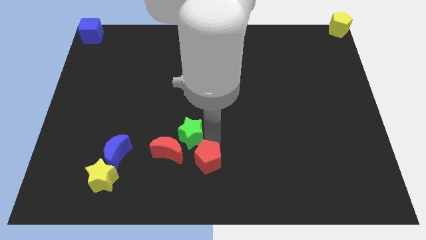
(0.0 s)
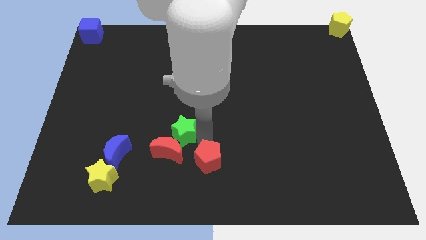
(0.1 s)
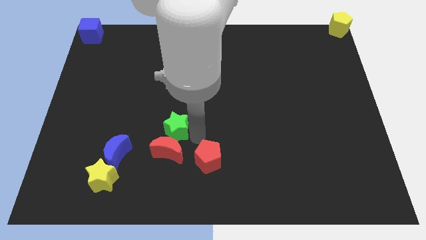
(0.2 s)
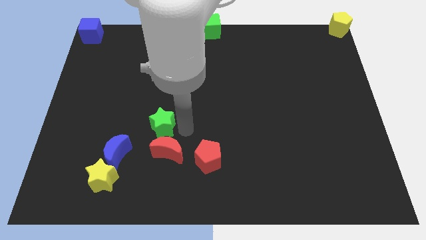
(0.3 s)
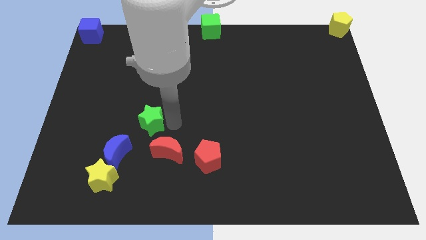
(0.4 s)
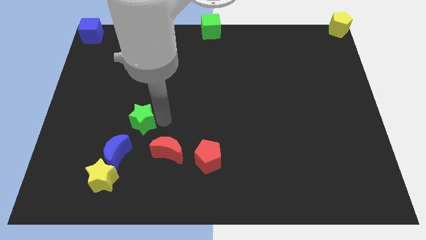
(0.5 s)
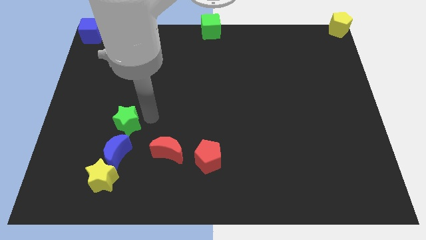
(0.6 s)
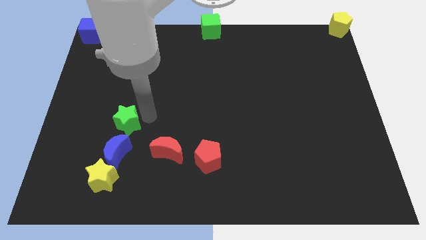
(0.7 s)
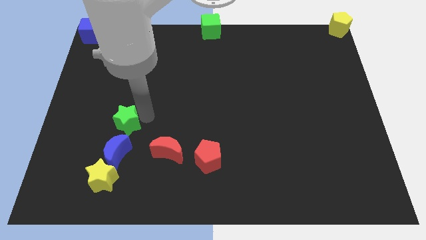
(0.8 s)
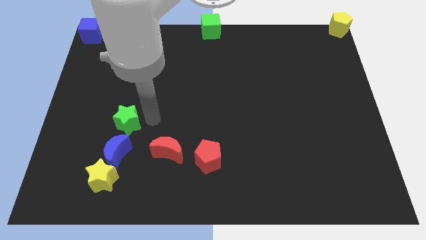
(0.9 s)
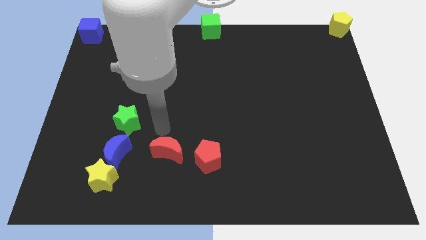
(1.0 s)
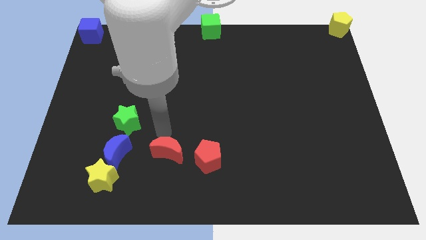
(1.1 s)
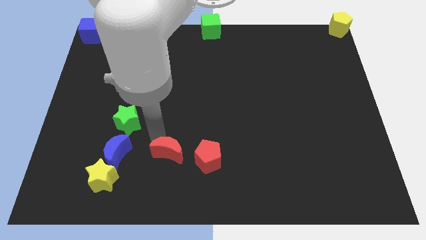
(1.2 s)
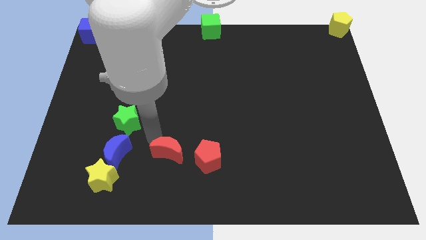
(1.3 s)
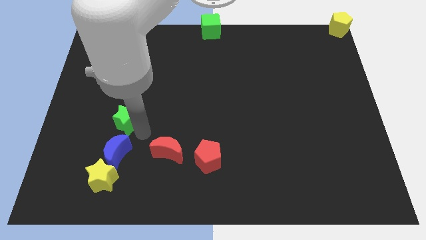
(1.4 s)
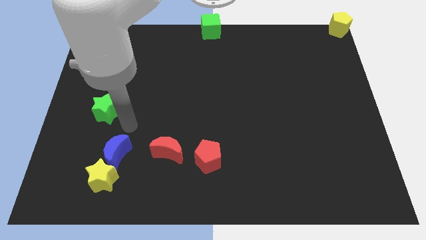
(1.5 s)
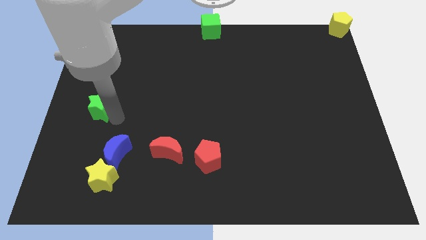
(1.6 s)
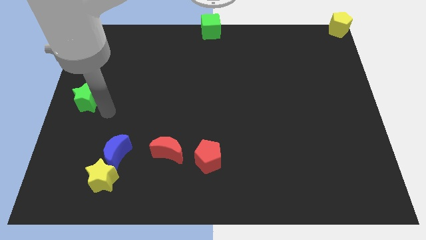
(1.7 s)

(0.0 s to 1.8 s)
separate the green star from the red pentagon

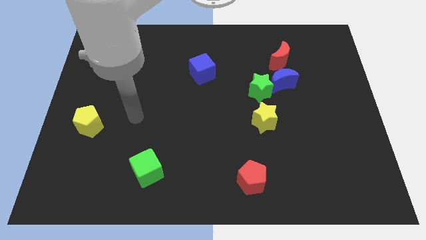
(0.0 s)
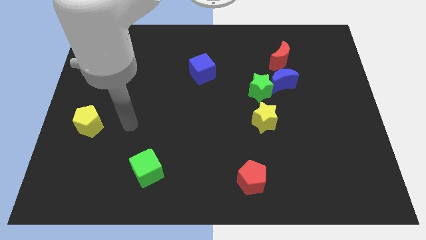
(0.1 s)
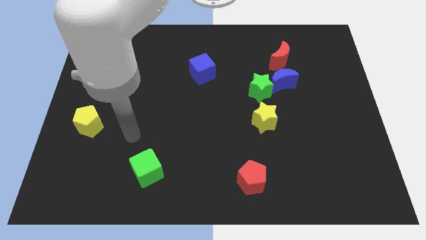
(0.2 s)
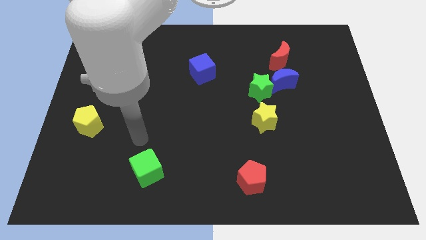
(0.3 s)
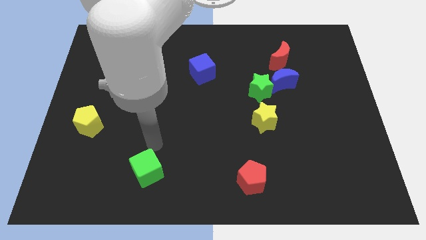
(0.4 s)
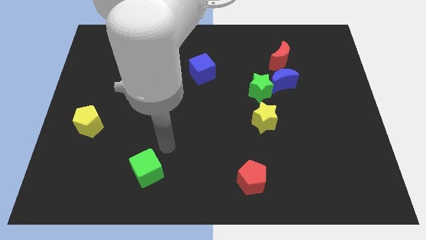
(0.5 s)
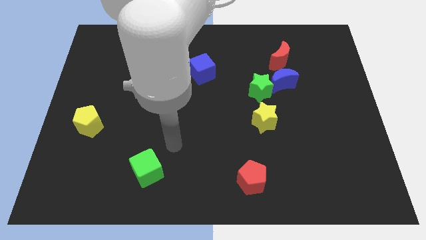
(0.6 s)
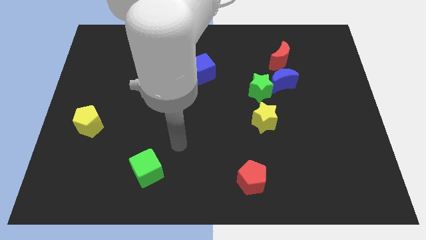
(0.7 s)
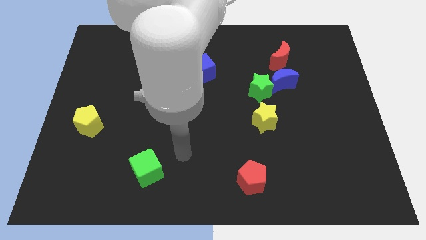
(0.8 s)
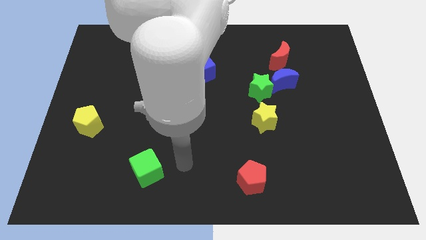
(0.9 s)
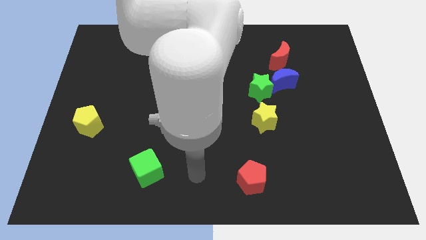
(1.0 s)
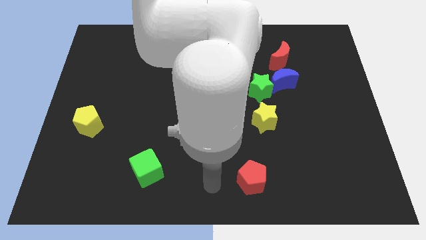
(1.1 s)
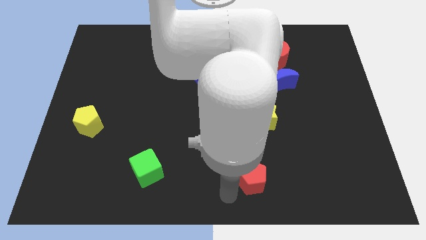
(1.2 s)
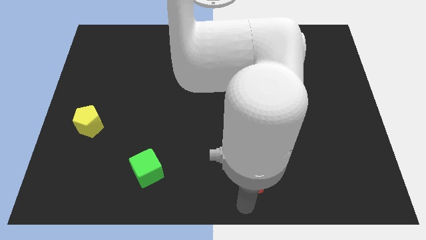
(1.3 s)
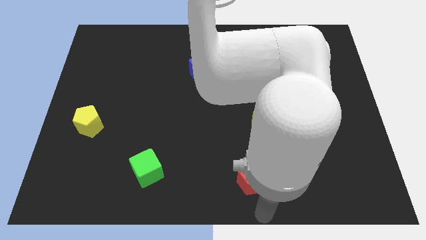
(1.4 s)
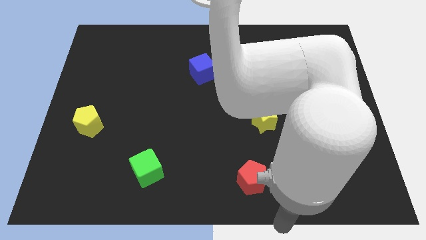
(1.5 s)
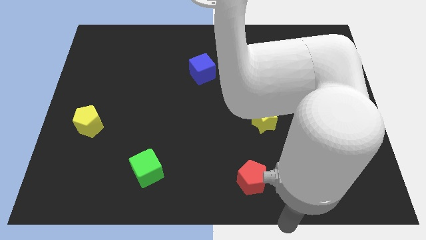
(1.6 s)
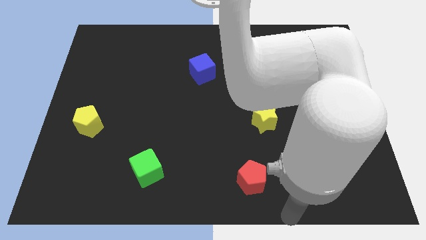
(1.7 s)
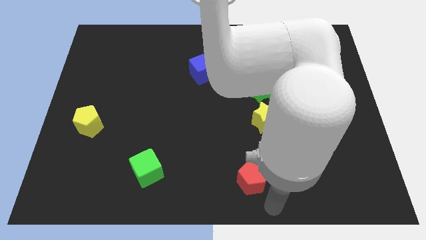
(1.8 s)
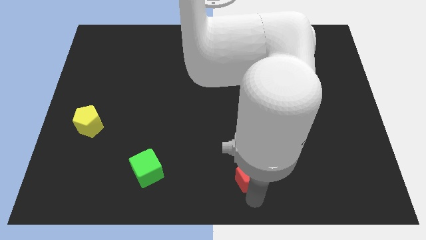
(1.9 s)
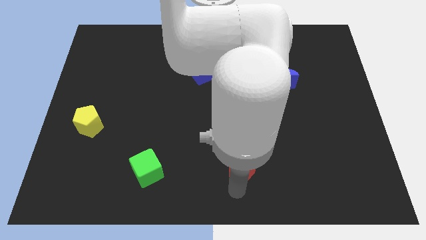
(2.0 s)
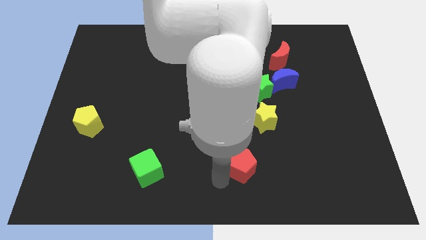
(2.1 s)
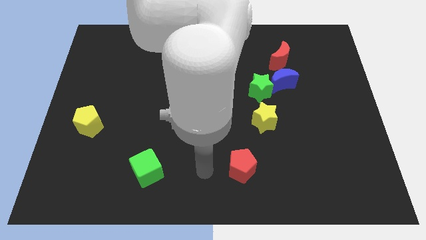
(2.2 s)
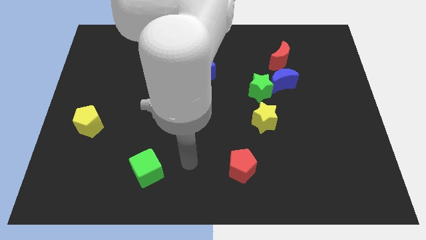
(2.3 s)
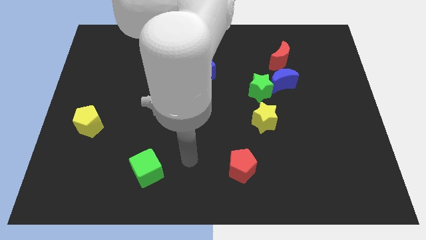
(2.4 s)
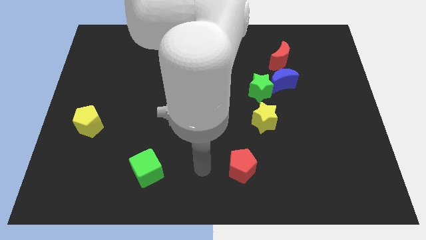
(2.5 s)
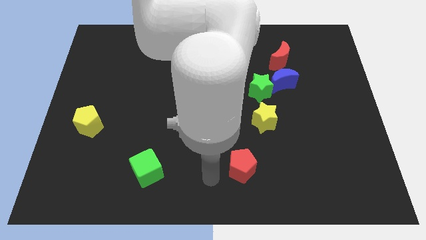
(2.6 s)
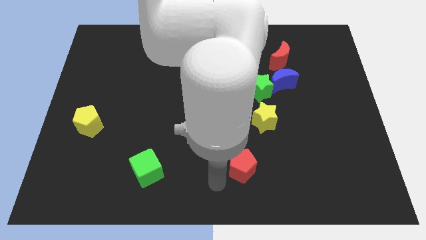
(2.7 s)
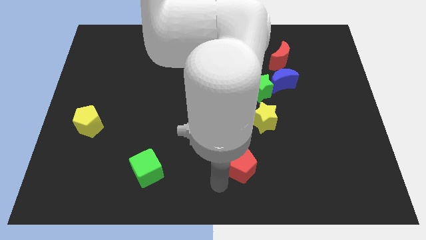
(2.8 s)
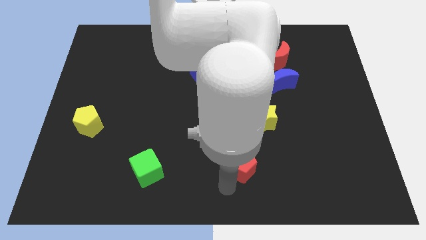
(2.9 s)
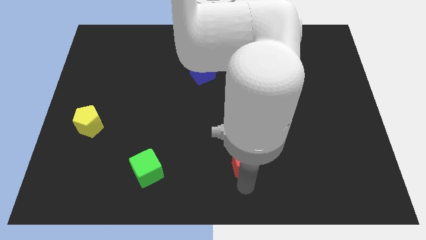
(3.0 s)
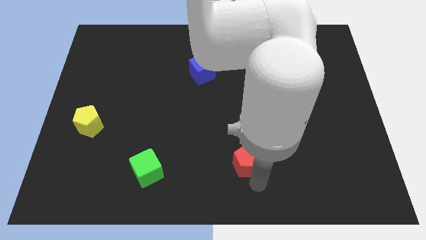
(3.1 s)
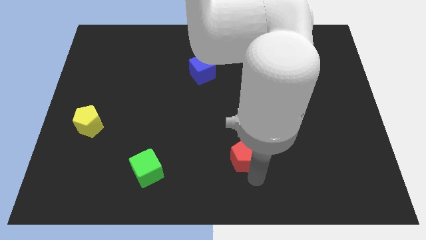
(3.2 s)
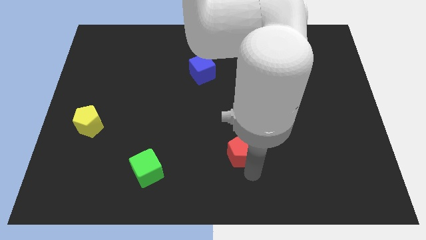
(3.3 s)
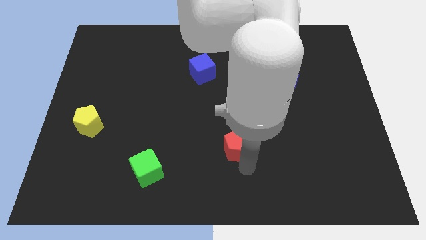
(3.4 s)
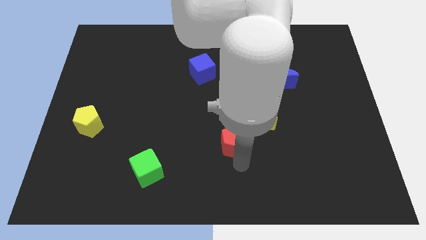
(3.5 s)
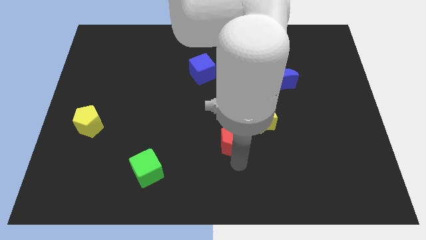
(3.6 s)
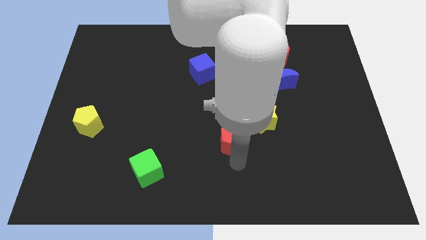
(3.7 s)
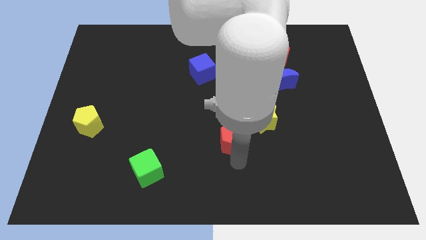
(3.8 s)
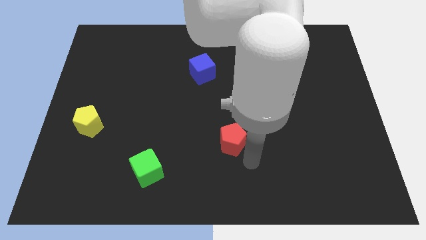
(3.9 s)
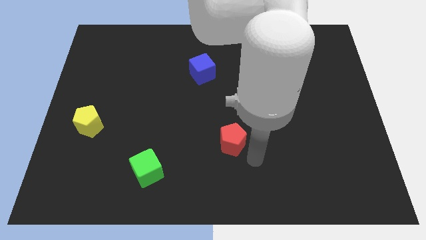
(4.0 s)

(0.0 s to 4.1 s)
push the red pentagon upwards slightly

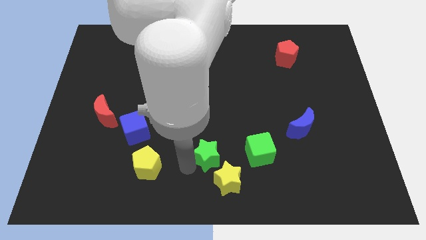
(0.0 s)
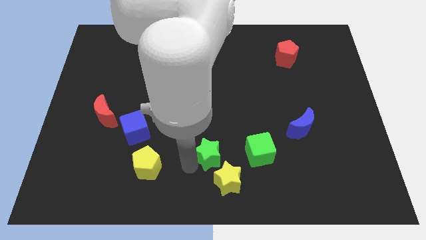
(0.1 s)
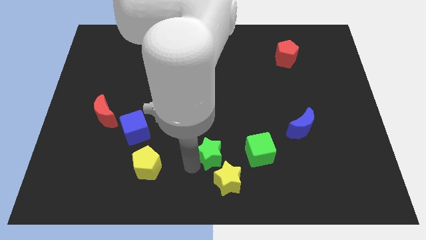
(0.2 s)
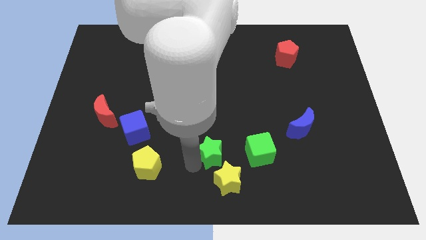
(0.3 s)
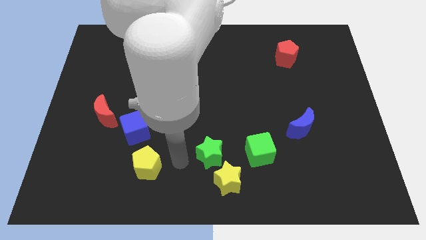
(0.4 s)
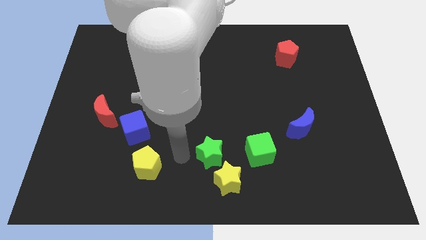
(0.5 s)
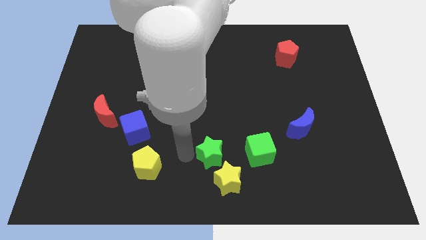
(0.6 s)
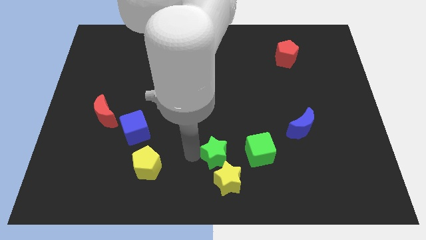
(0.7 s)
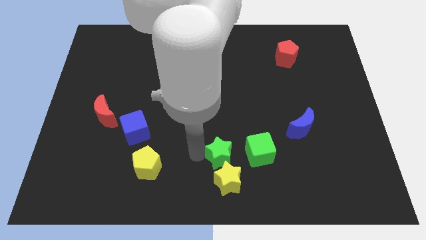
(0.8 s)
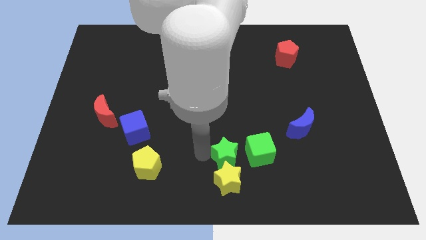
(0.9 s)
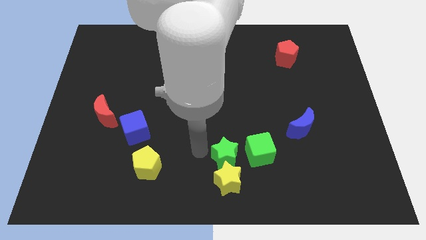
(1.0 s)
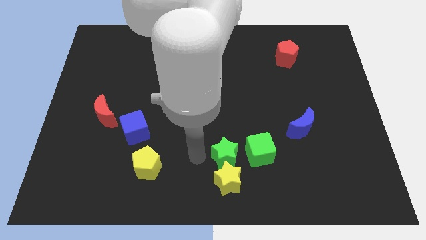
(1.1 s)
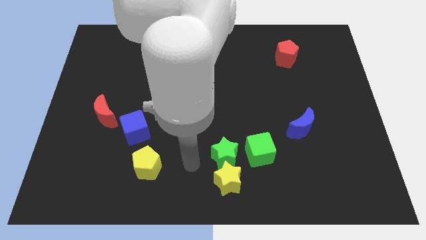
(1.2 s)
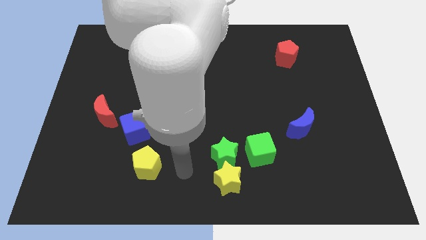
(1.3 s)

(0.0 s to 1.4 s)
move the green star at the top of the yellow star

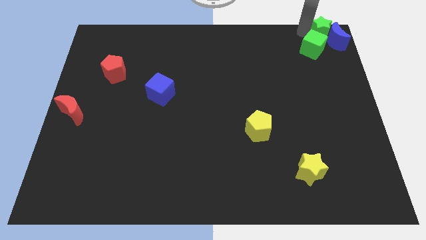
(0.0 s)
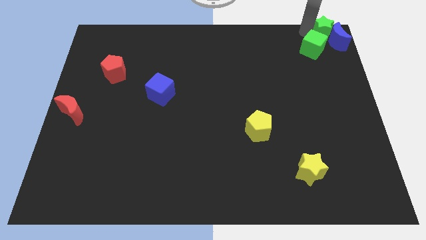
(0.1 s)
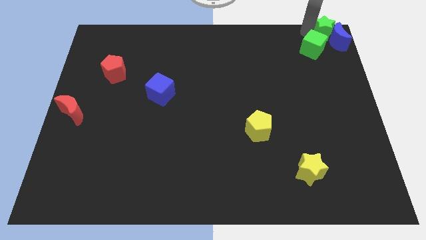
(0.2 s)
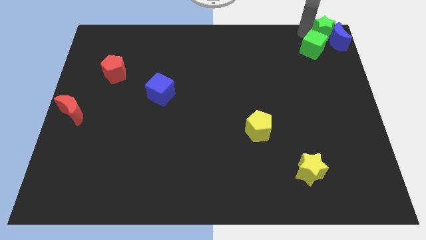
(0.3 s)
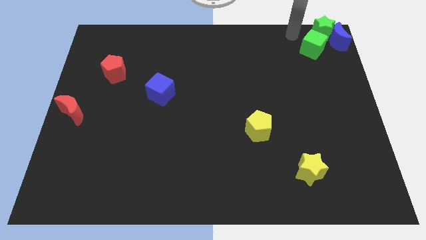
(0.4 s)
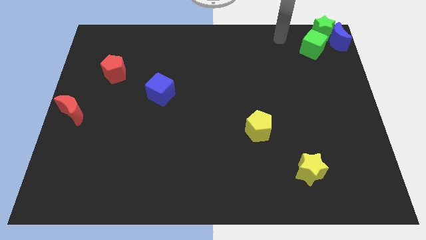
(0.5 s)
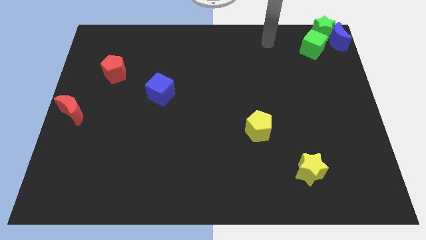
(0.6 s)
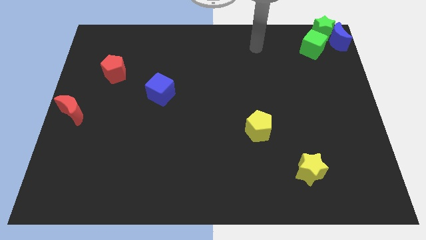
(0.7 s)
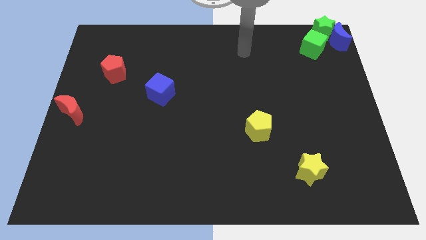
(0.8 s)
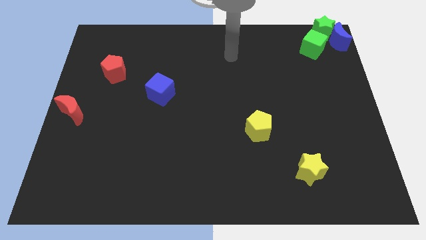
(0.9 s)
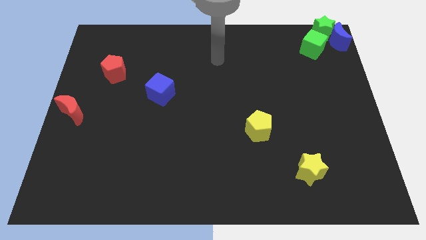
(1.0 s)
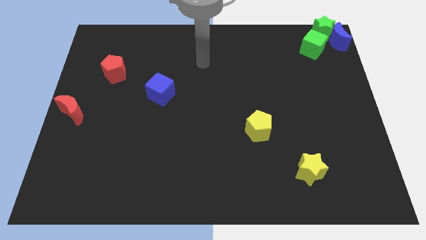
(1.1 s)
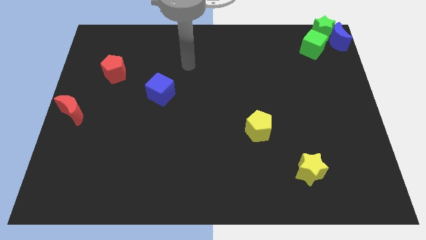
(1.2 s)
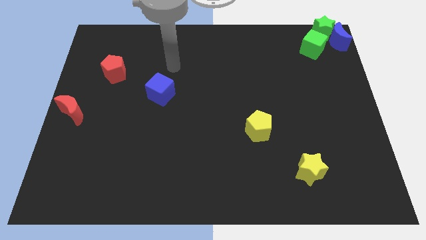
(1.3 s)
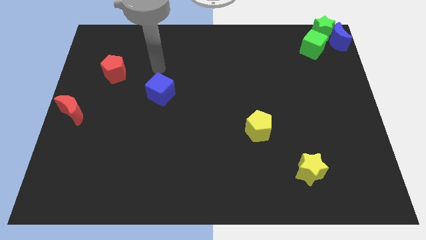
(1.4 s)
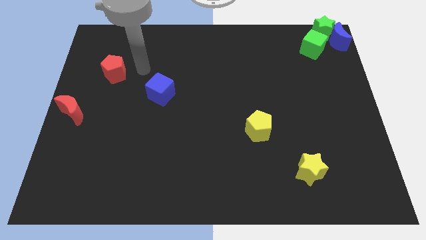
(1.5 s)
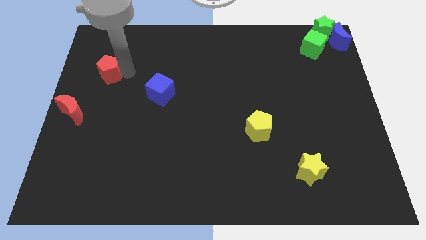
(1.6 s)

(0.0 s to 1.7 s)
move your arm away from the green star

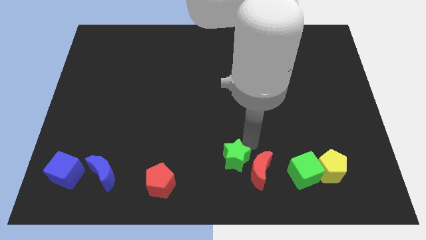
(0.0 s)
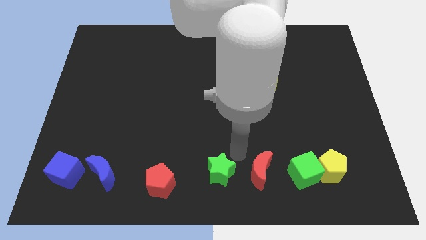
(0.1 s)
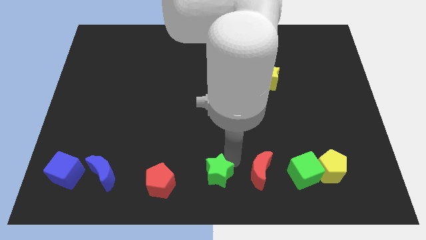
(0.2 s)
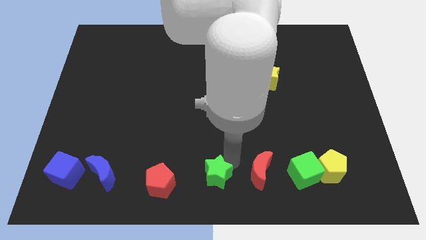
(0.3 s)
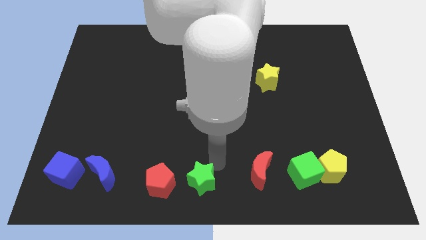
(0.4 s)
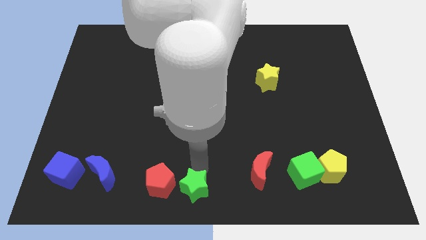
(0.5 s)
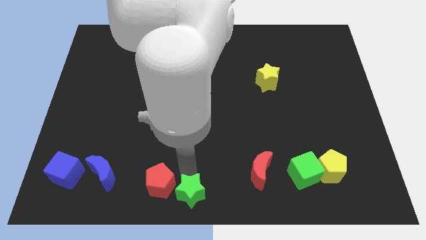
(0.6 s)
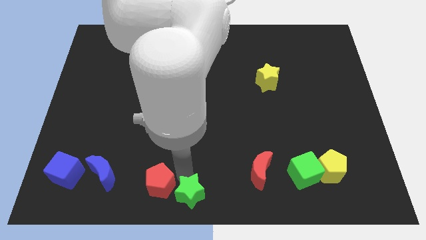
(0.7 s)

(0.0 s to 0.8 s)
place the green star towards the right side of the red pentagon
